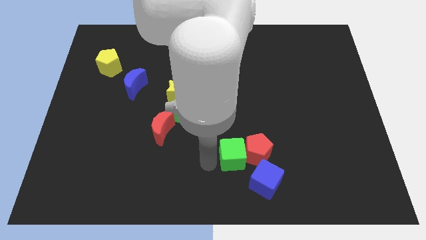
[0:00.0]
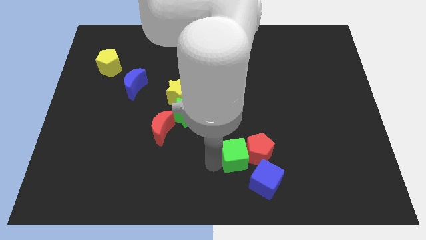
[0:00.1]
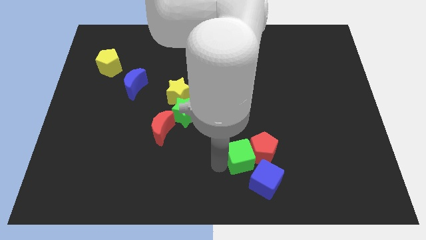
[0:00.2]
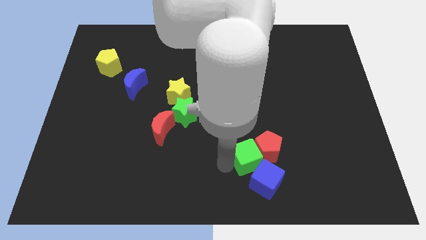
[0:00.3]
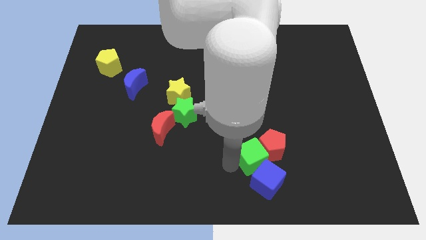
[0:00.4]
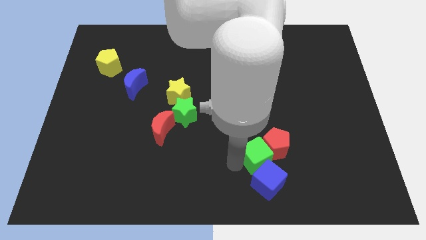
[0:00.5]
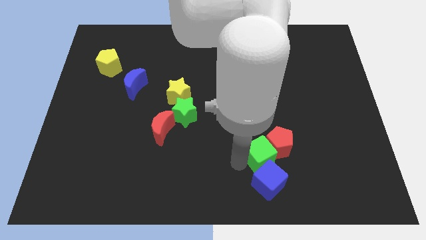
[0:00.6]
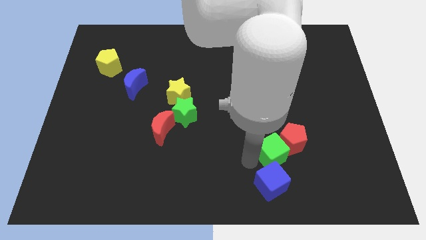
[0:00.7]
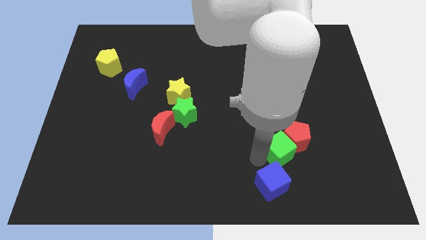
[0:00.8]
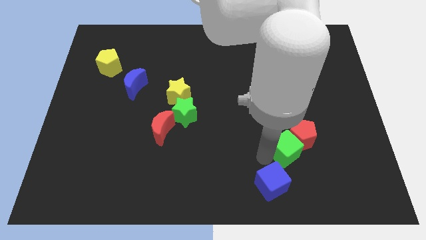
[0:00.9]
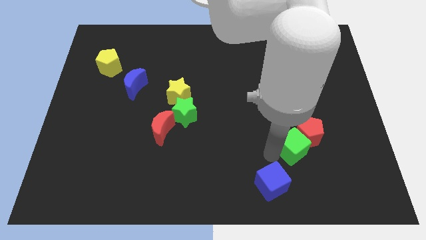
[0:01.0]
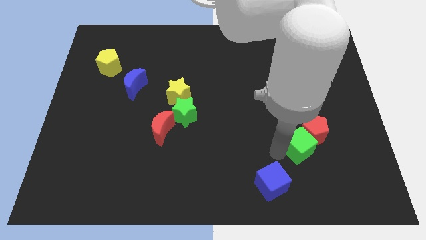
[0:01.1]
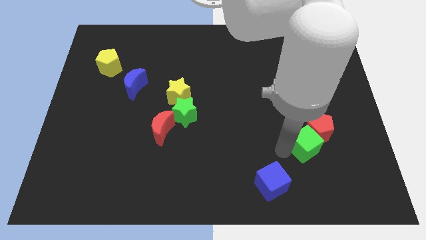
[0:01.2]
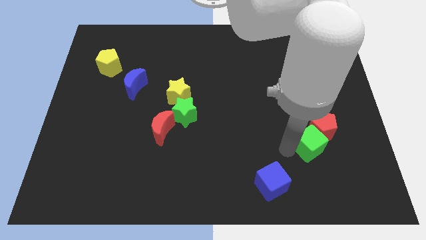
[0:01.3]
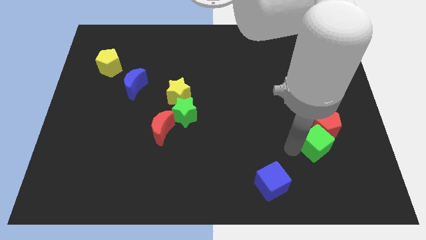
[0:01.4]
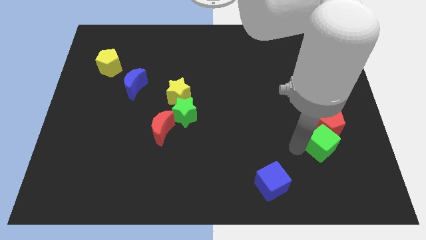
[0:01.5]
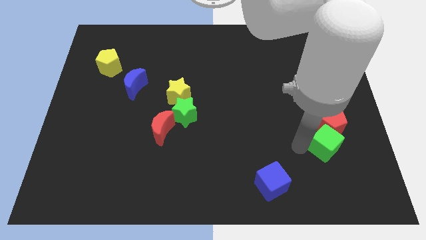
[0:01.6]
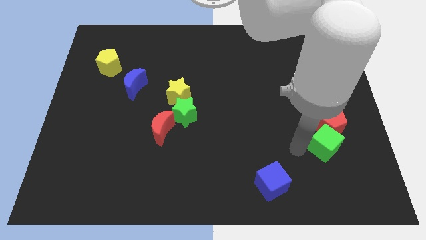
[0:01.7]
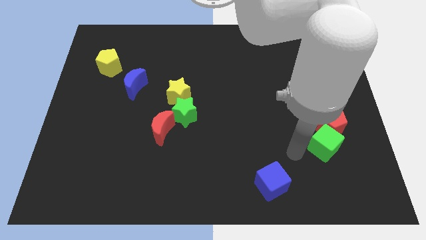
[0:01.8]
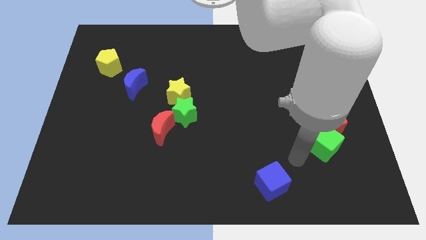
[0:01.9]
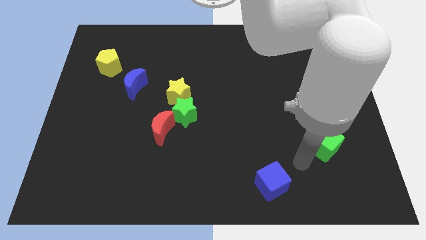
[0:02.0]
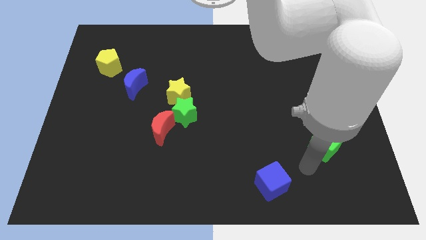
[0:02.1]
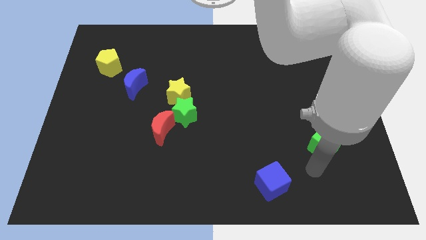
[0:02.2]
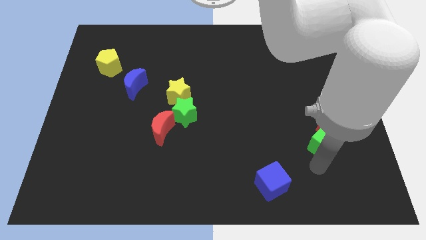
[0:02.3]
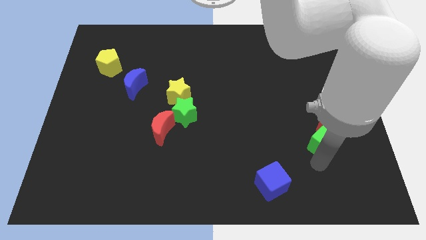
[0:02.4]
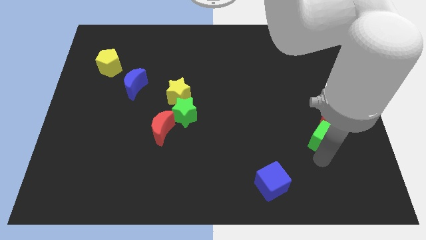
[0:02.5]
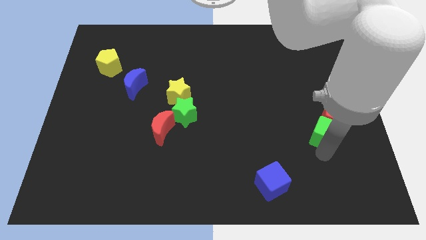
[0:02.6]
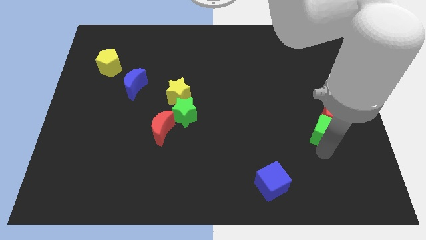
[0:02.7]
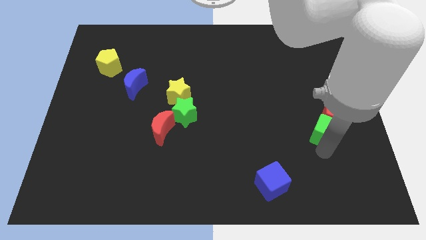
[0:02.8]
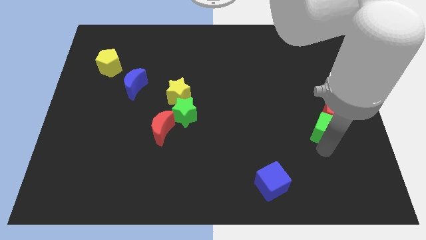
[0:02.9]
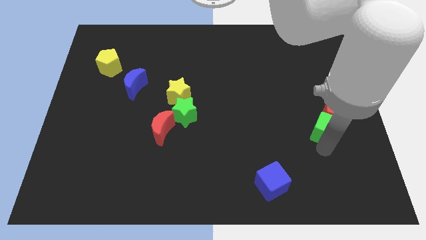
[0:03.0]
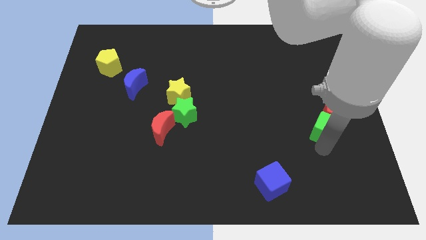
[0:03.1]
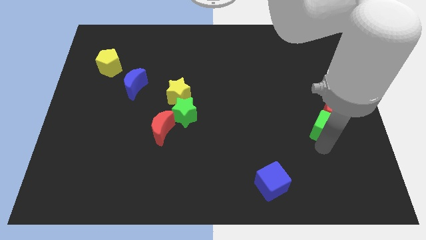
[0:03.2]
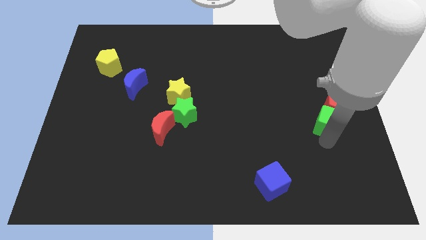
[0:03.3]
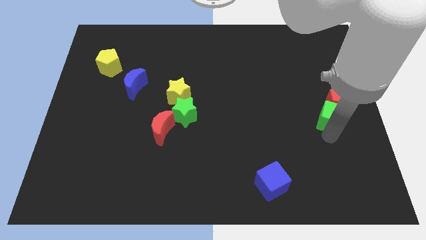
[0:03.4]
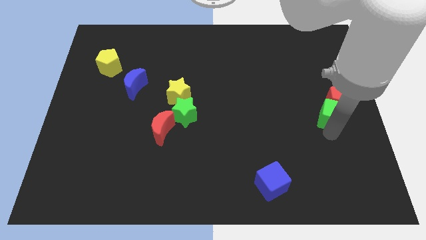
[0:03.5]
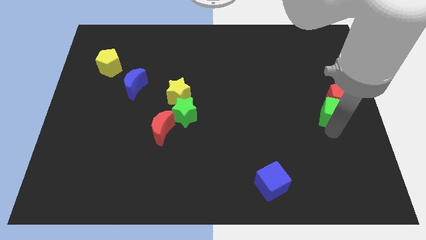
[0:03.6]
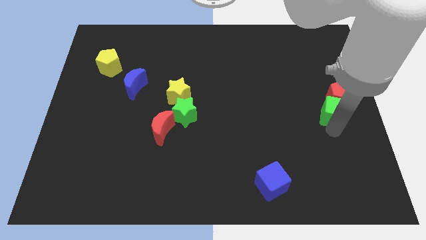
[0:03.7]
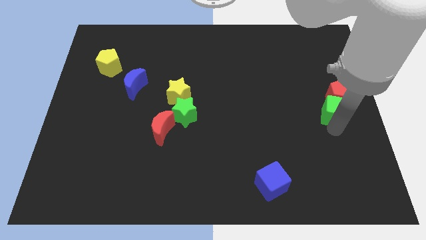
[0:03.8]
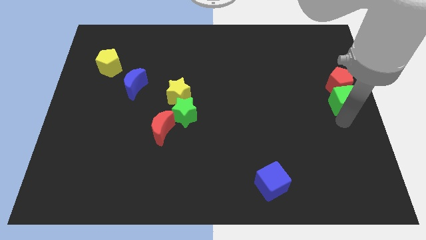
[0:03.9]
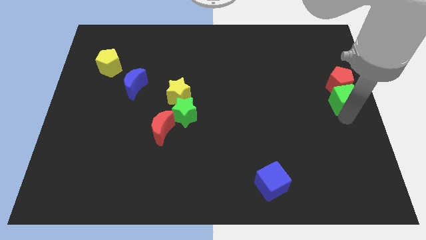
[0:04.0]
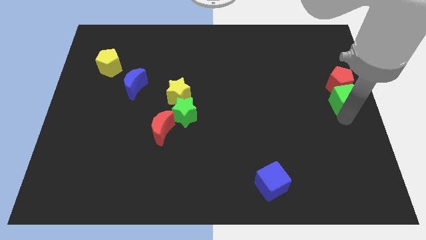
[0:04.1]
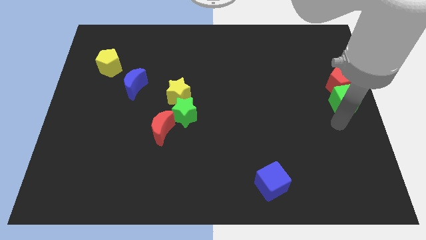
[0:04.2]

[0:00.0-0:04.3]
push red pentagon and green cube to the right center

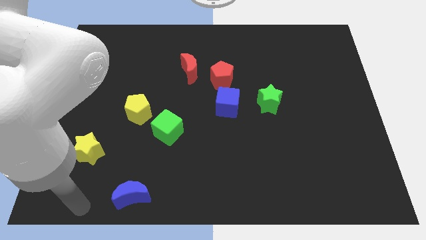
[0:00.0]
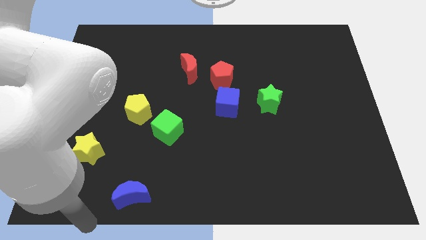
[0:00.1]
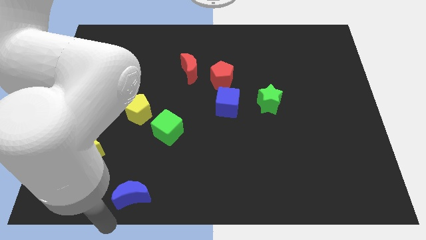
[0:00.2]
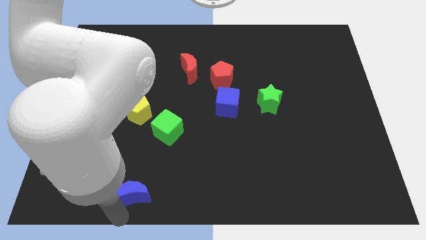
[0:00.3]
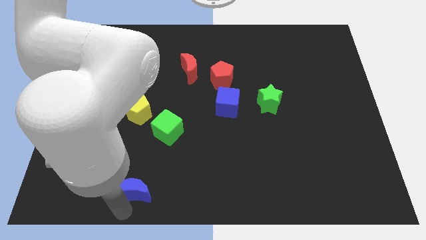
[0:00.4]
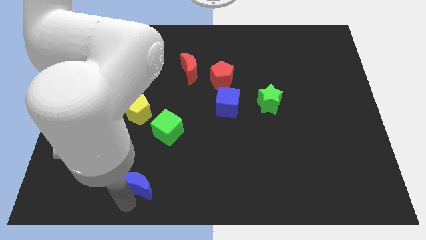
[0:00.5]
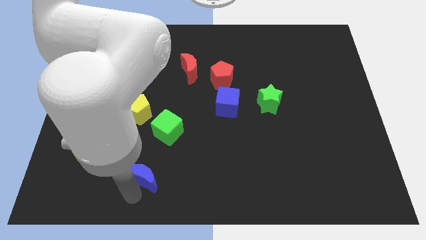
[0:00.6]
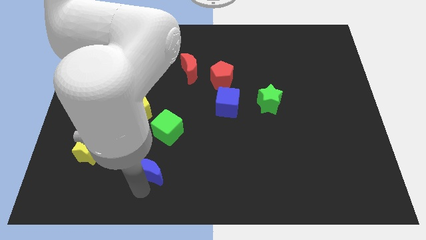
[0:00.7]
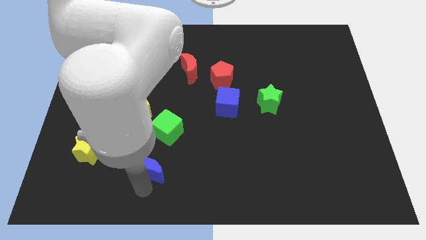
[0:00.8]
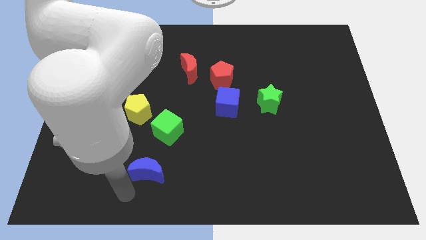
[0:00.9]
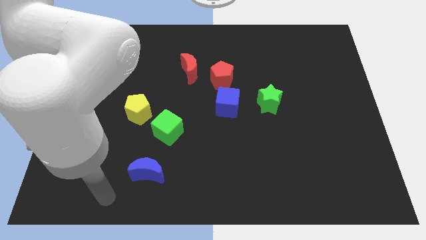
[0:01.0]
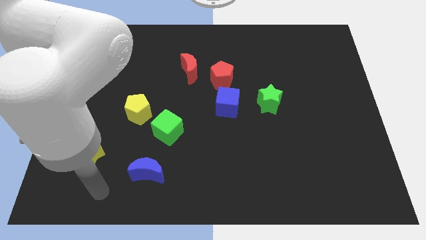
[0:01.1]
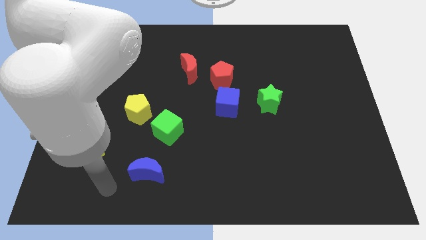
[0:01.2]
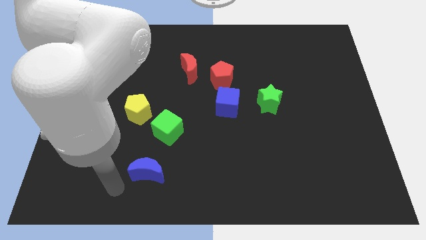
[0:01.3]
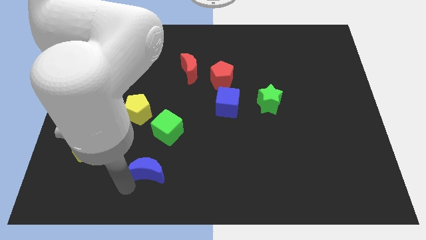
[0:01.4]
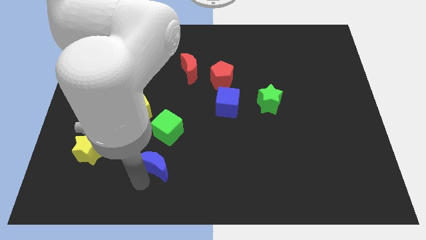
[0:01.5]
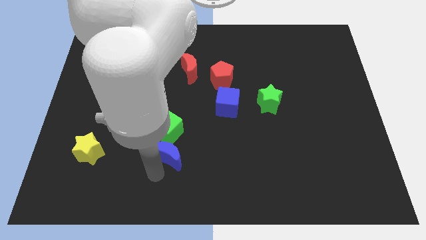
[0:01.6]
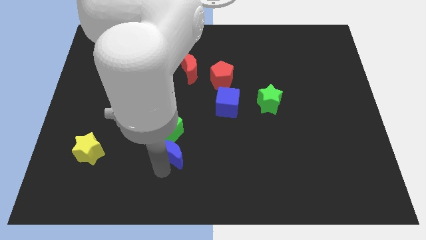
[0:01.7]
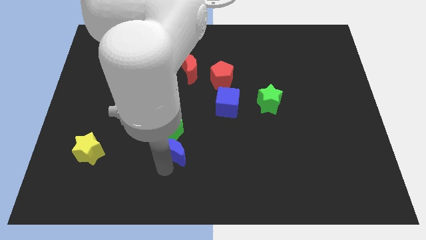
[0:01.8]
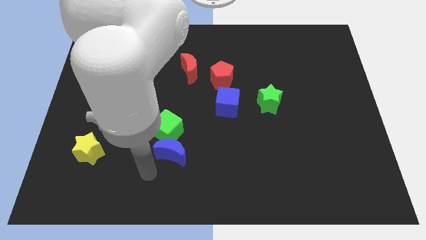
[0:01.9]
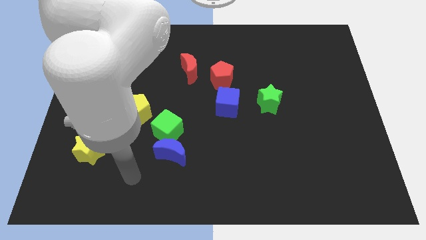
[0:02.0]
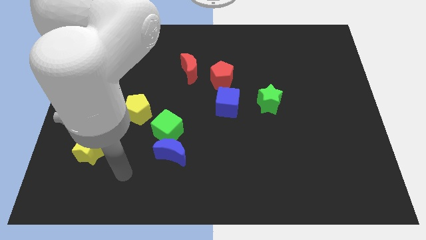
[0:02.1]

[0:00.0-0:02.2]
push blue moon into green cube

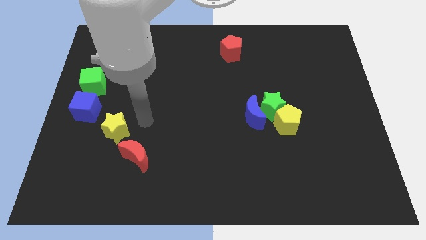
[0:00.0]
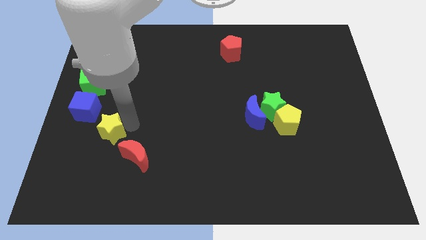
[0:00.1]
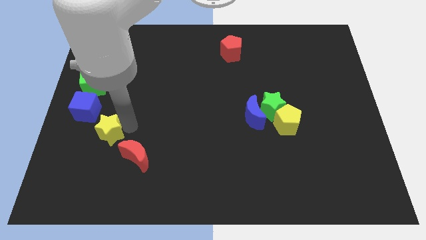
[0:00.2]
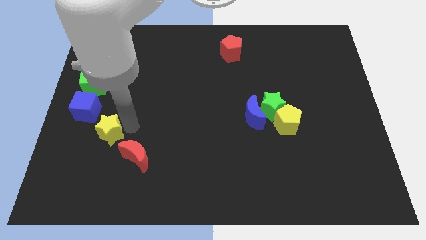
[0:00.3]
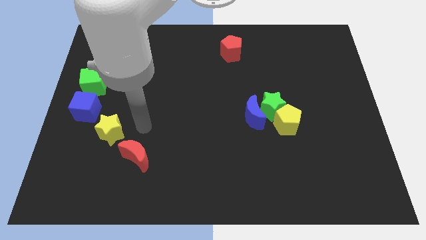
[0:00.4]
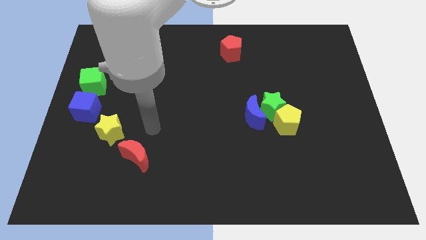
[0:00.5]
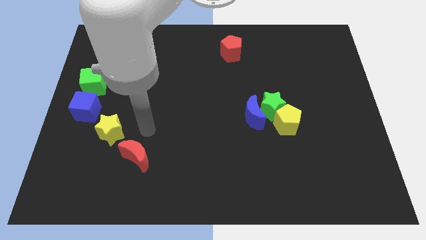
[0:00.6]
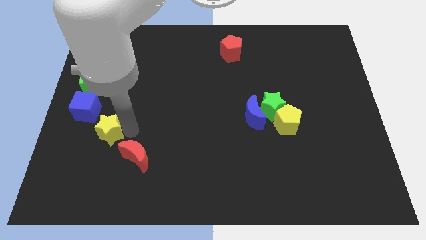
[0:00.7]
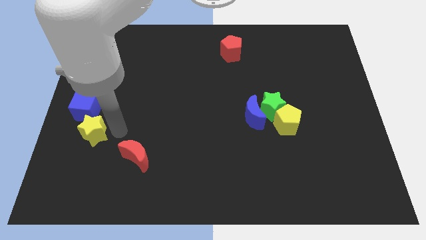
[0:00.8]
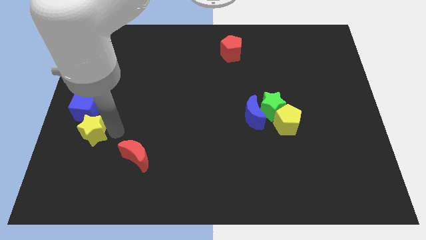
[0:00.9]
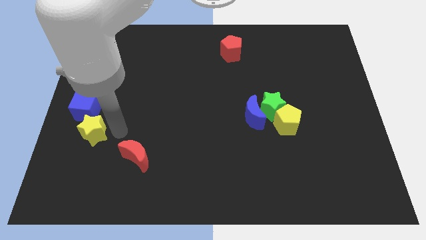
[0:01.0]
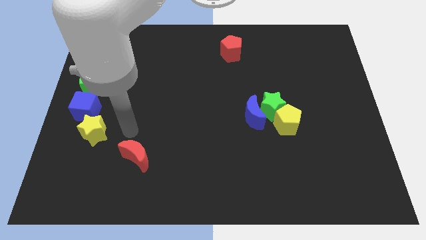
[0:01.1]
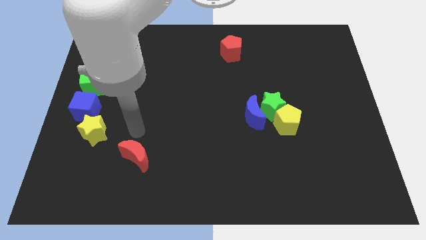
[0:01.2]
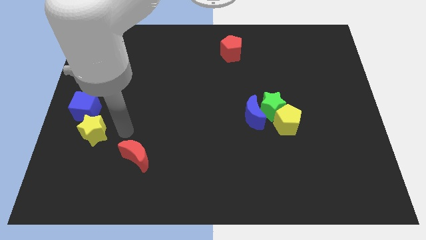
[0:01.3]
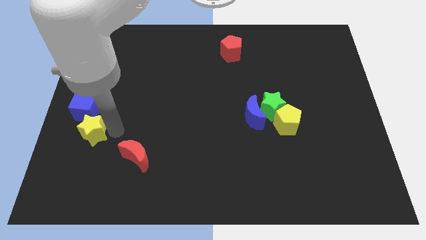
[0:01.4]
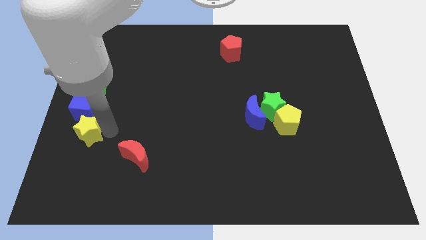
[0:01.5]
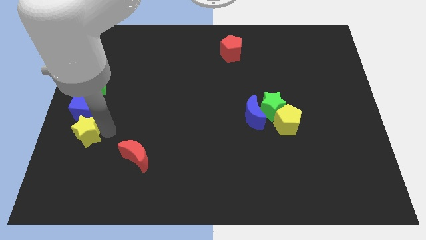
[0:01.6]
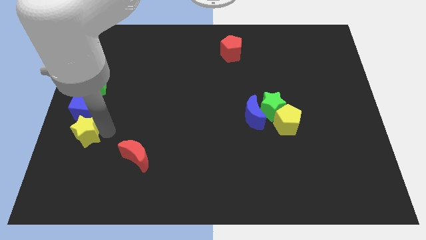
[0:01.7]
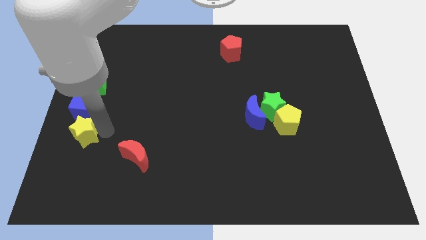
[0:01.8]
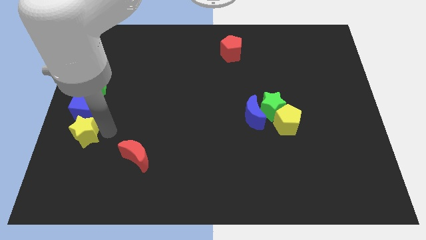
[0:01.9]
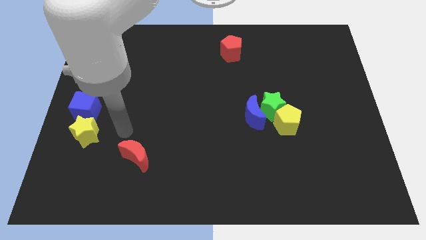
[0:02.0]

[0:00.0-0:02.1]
slide the yellow star to the bottom of the blue cube

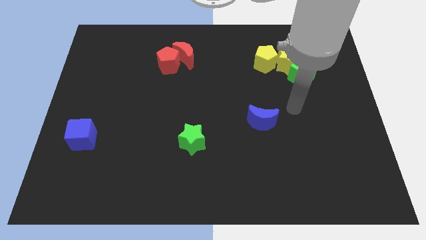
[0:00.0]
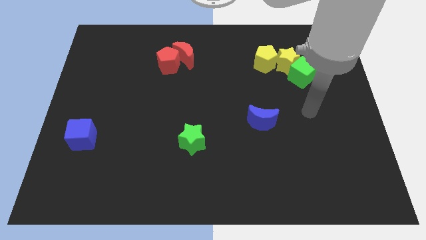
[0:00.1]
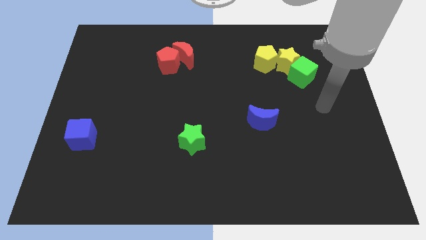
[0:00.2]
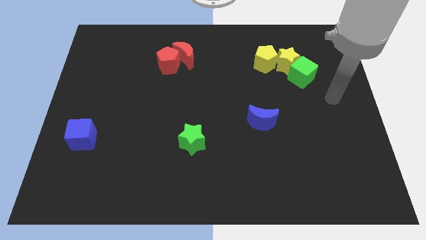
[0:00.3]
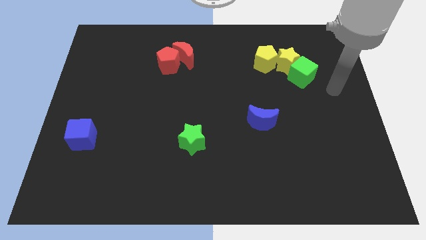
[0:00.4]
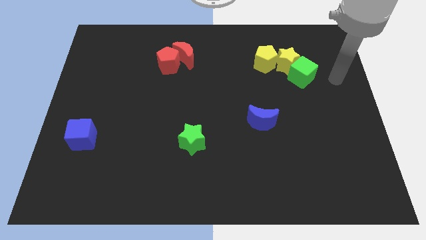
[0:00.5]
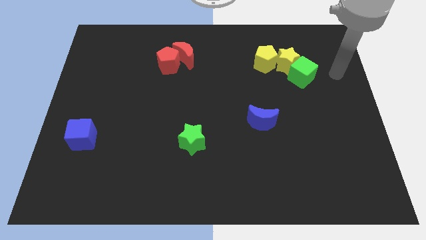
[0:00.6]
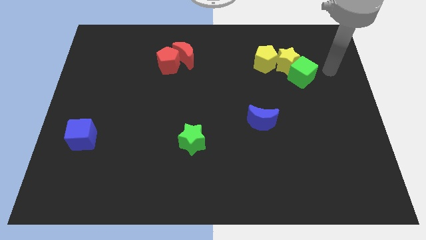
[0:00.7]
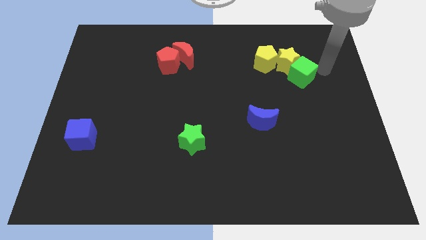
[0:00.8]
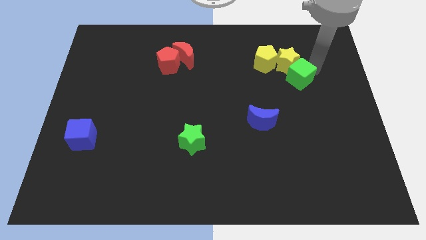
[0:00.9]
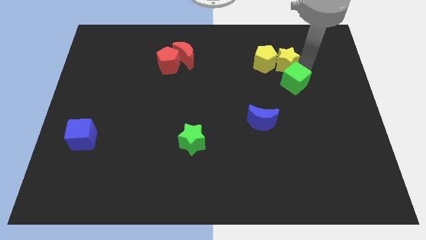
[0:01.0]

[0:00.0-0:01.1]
push the green cube to the bottom of the yellow star
